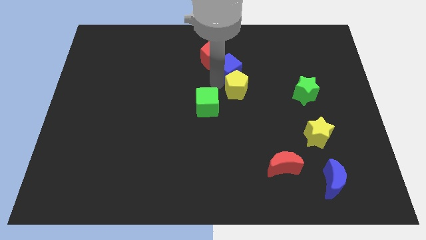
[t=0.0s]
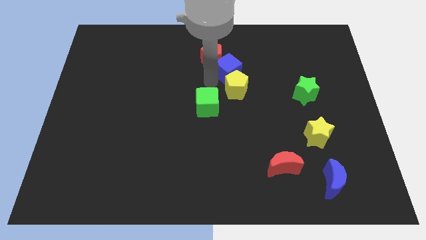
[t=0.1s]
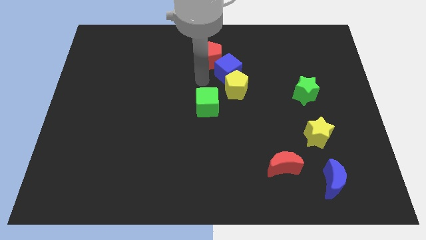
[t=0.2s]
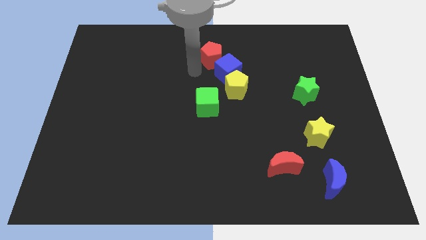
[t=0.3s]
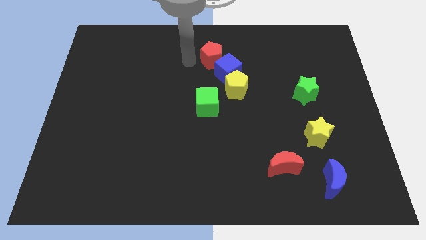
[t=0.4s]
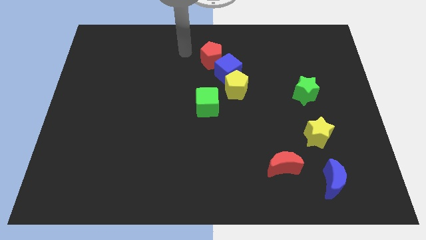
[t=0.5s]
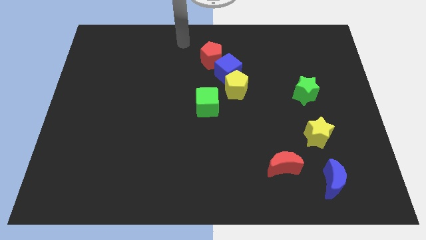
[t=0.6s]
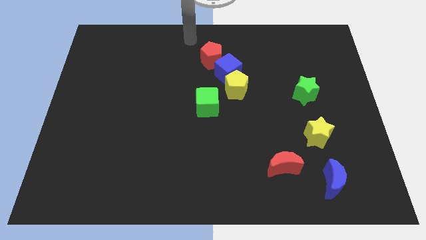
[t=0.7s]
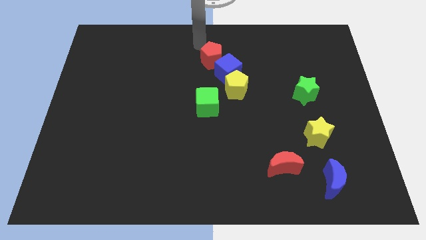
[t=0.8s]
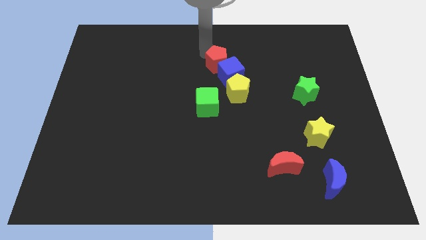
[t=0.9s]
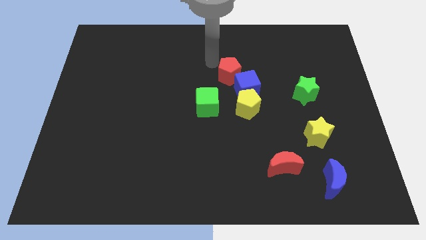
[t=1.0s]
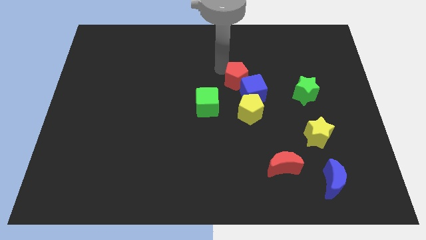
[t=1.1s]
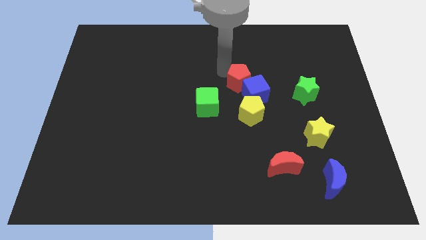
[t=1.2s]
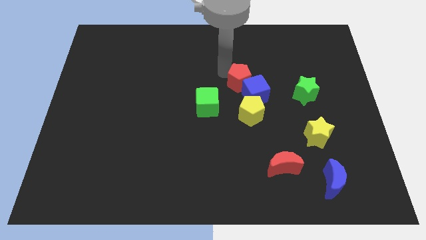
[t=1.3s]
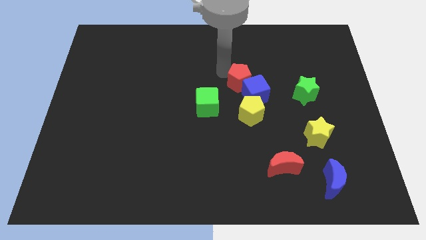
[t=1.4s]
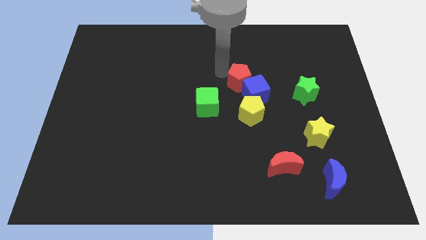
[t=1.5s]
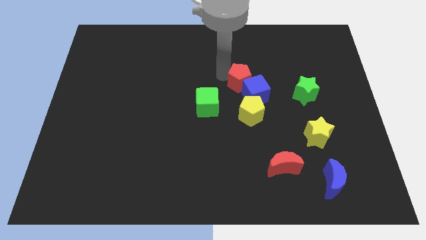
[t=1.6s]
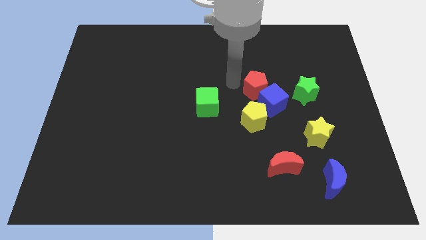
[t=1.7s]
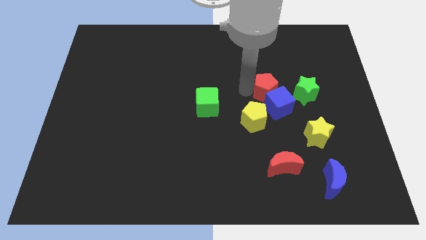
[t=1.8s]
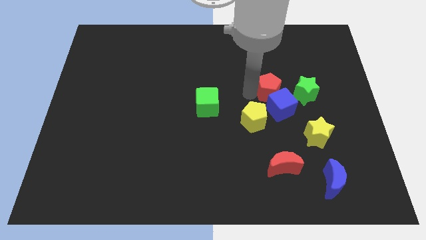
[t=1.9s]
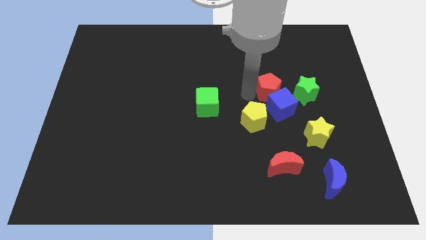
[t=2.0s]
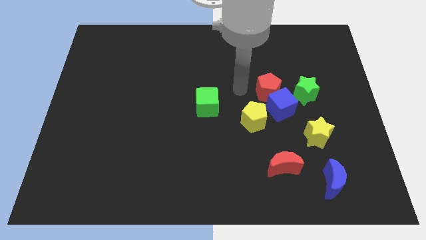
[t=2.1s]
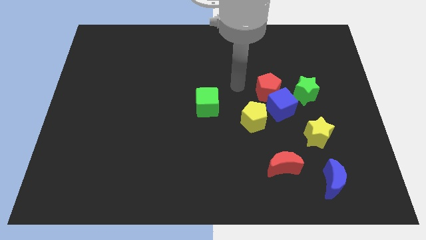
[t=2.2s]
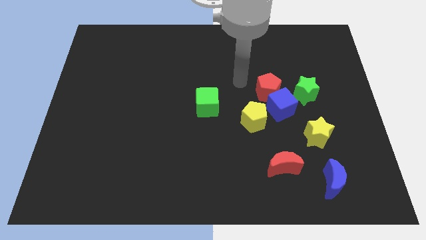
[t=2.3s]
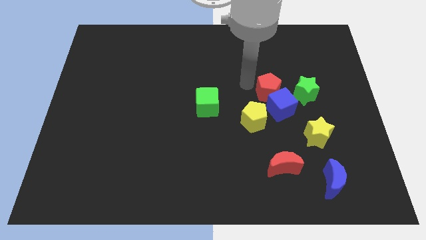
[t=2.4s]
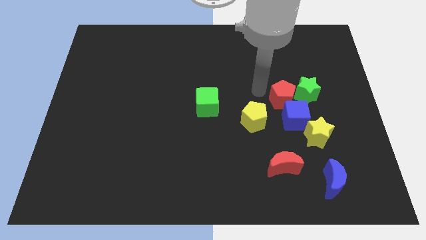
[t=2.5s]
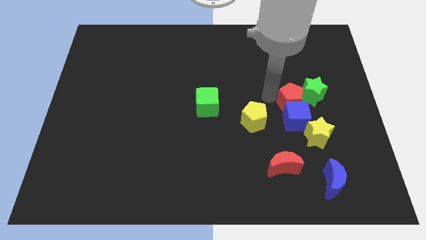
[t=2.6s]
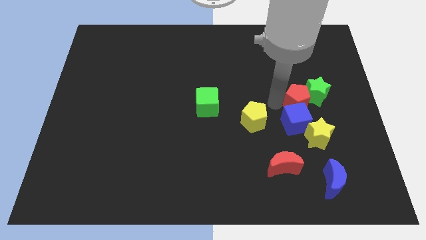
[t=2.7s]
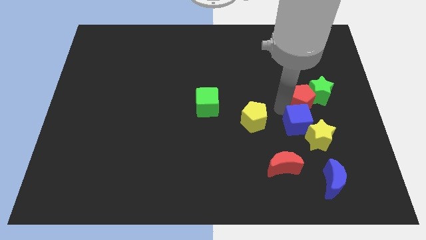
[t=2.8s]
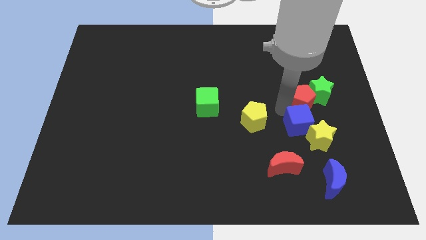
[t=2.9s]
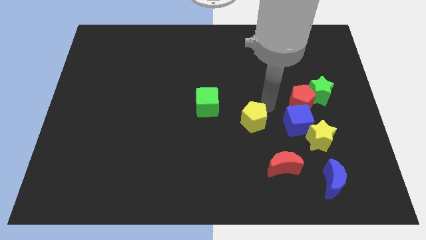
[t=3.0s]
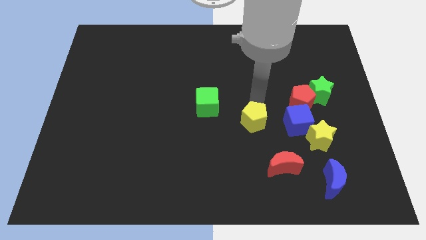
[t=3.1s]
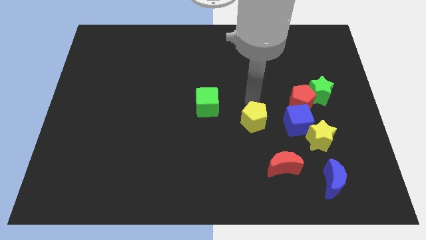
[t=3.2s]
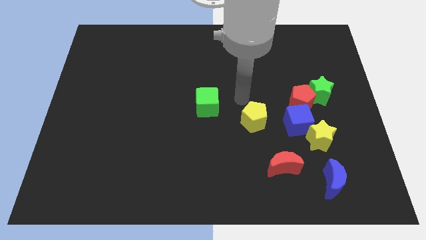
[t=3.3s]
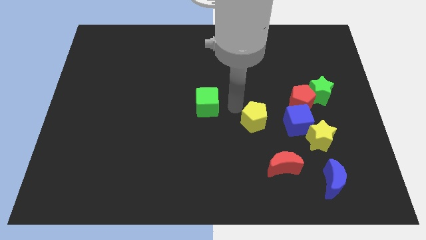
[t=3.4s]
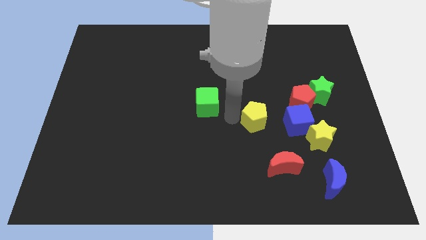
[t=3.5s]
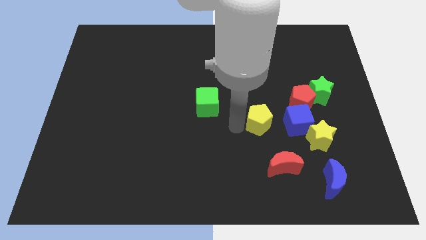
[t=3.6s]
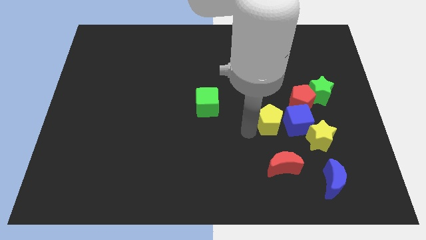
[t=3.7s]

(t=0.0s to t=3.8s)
push the red pentagon into the blue cube

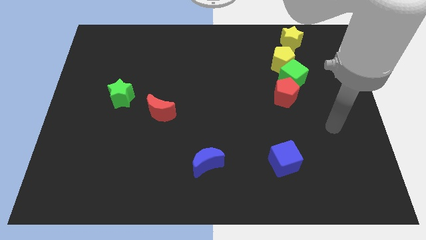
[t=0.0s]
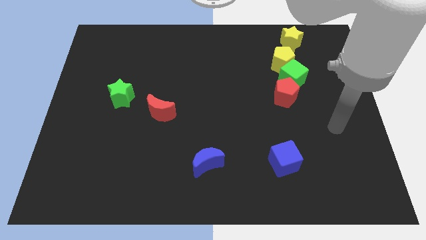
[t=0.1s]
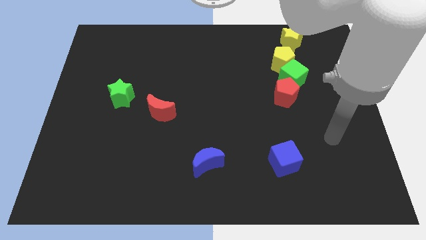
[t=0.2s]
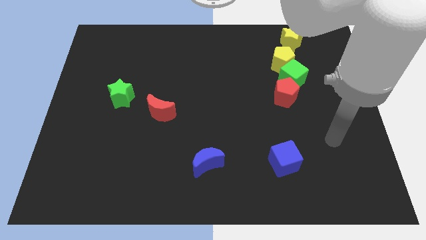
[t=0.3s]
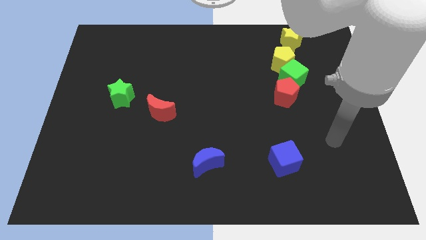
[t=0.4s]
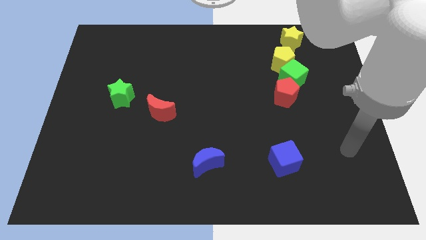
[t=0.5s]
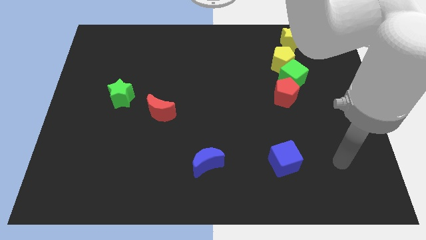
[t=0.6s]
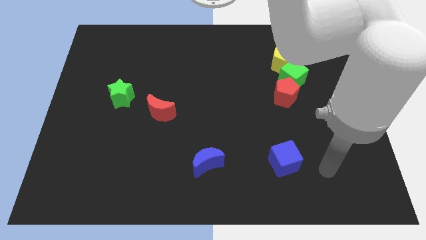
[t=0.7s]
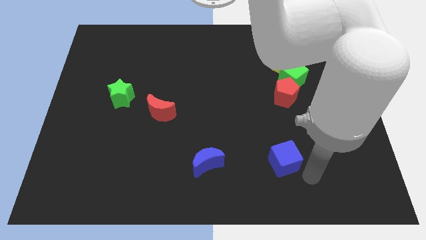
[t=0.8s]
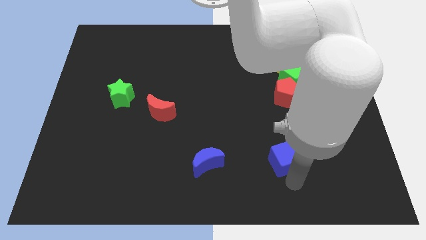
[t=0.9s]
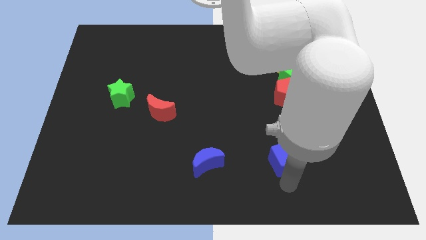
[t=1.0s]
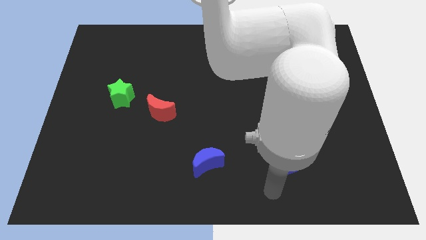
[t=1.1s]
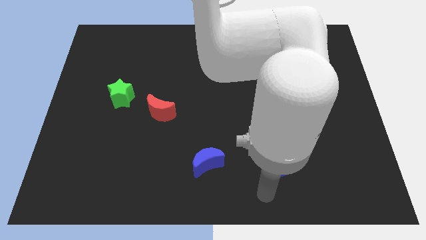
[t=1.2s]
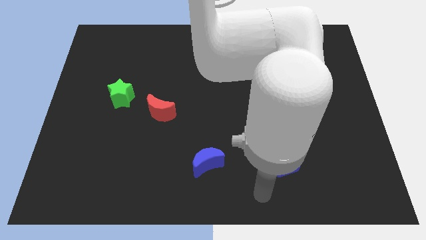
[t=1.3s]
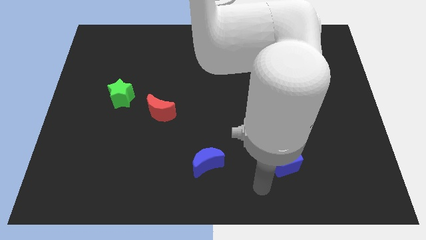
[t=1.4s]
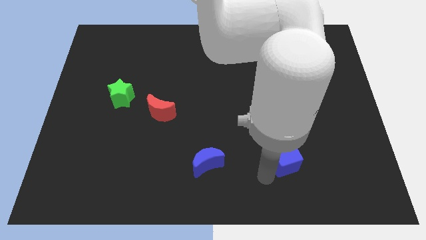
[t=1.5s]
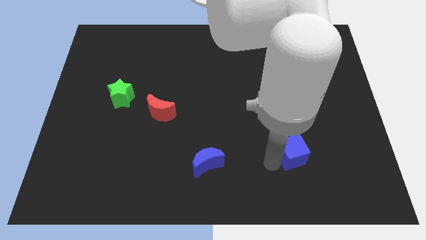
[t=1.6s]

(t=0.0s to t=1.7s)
move blue cube towards right side

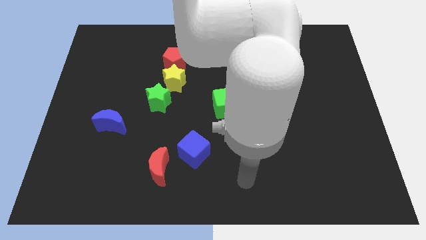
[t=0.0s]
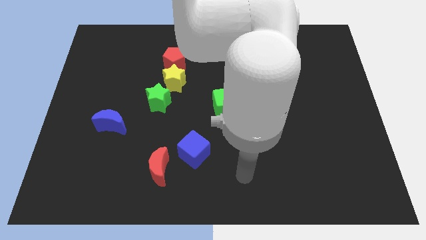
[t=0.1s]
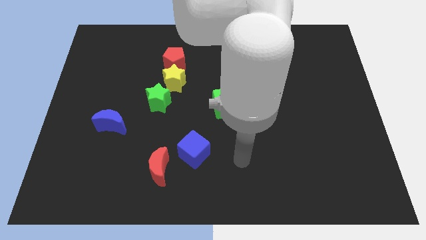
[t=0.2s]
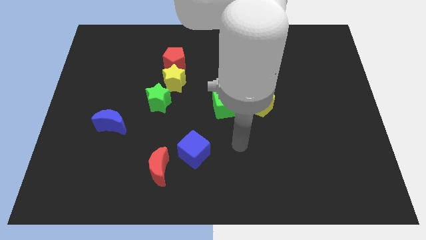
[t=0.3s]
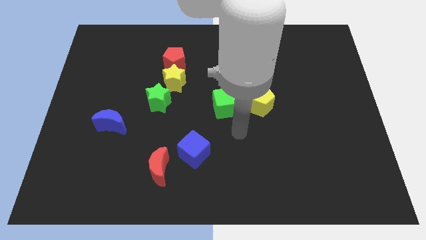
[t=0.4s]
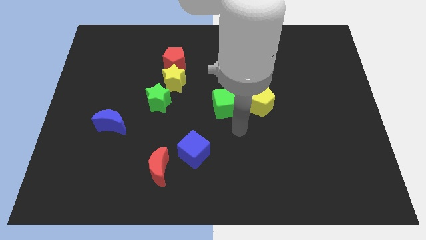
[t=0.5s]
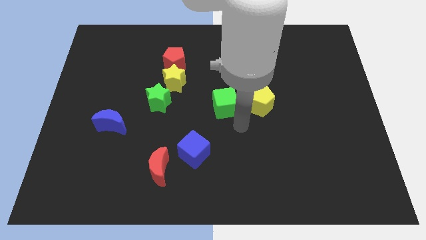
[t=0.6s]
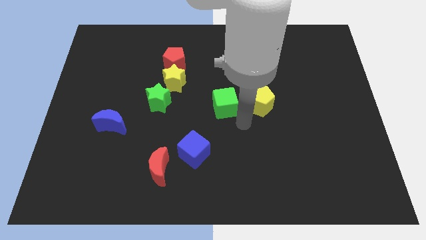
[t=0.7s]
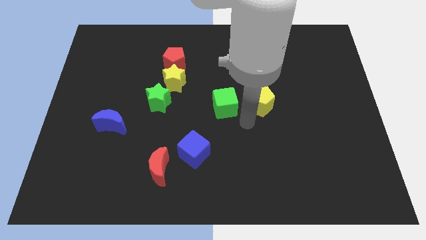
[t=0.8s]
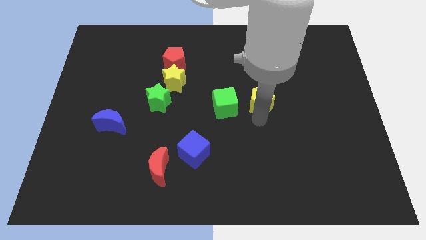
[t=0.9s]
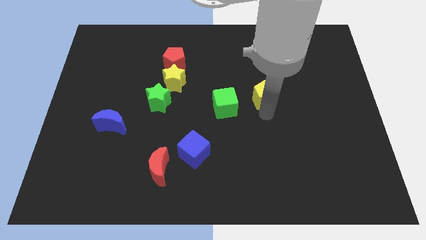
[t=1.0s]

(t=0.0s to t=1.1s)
move the arm to the bottom side of the yellow pentagon

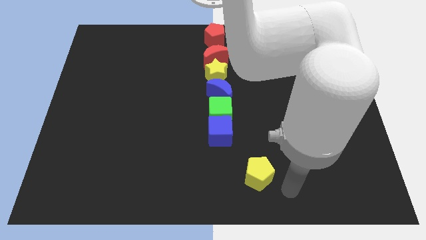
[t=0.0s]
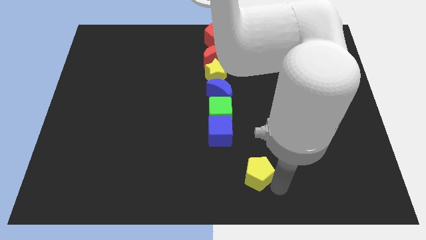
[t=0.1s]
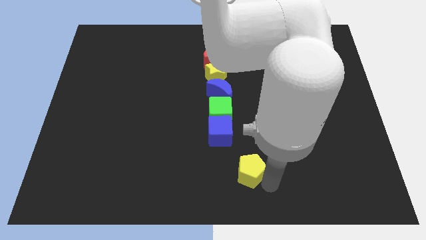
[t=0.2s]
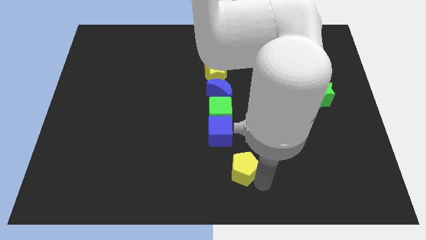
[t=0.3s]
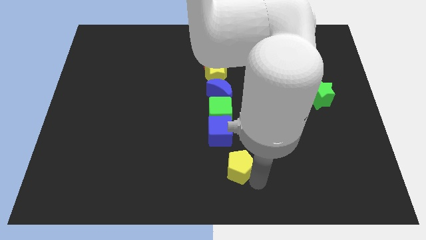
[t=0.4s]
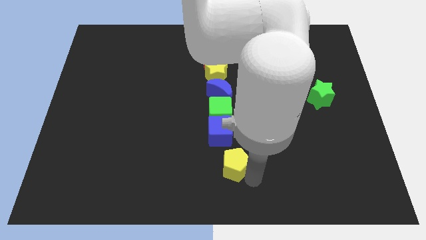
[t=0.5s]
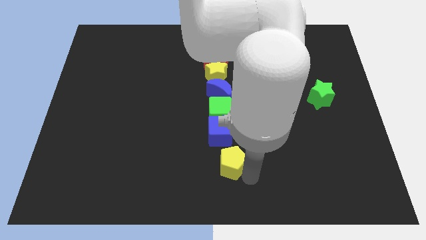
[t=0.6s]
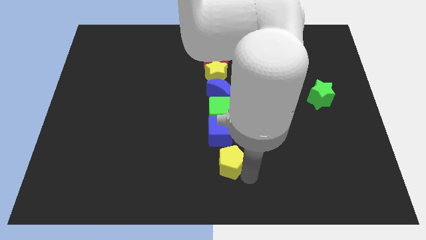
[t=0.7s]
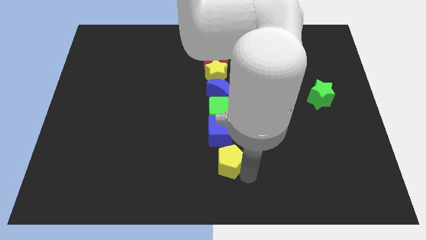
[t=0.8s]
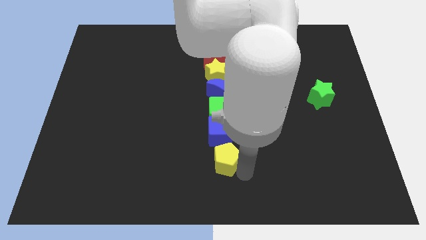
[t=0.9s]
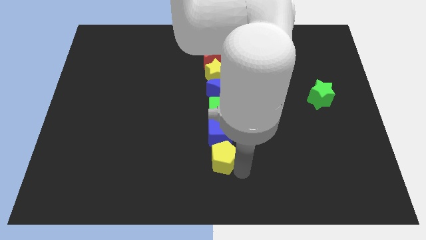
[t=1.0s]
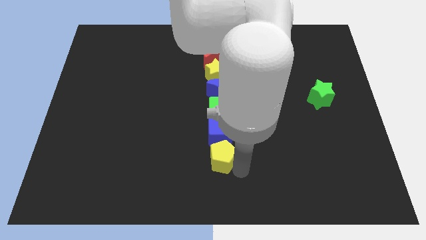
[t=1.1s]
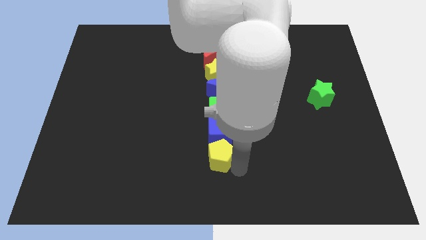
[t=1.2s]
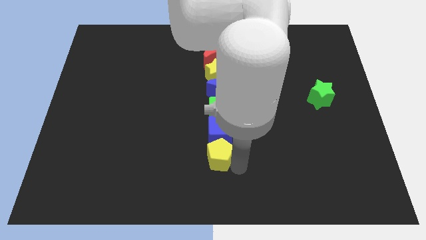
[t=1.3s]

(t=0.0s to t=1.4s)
put the yellow pentagon underneath the blue cube

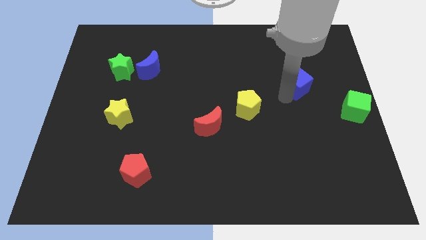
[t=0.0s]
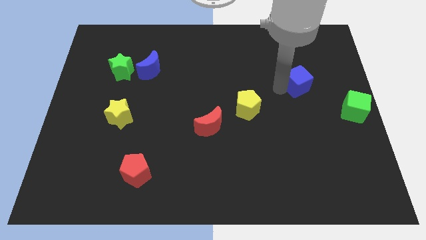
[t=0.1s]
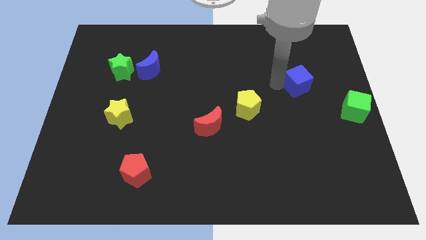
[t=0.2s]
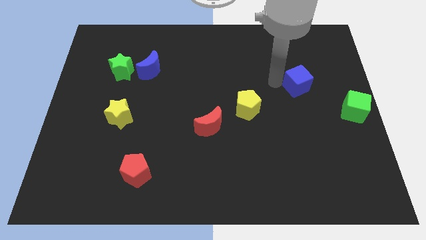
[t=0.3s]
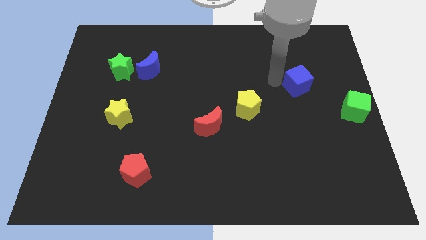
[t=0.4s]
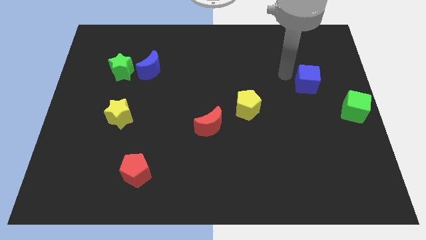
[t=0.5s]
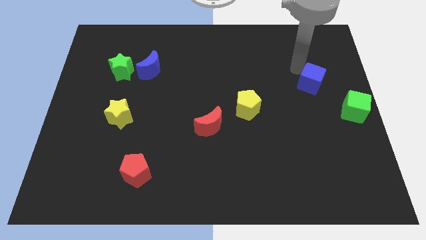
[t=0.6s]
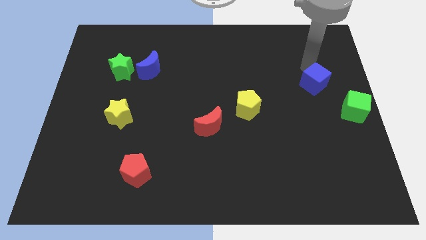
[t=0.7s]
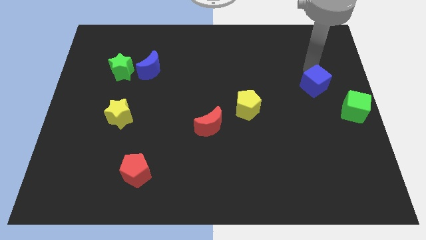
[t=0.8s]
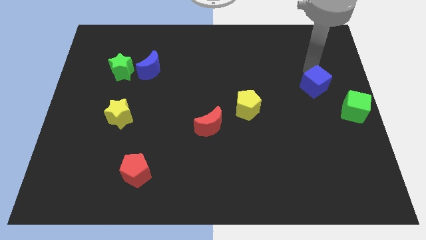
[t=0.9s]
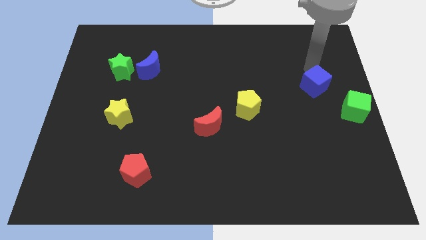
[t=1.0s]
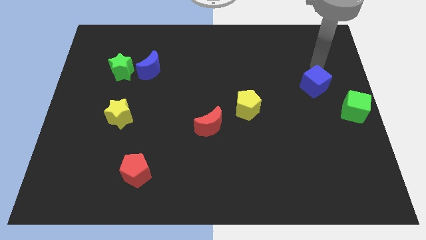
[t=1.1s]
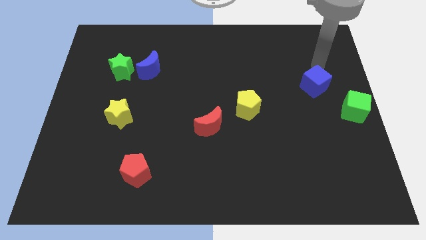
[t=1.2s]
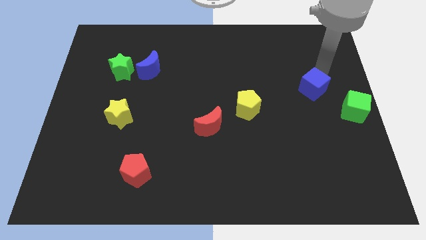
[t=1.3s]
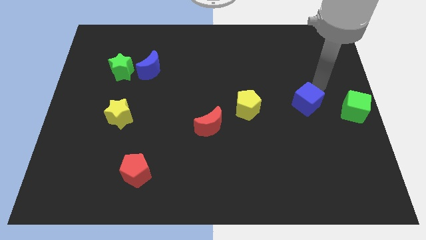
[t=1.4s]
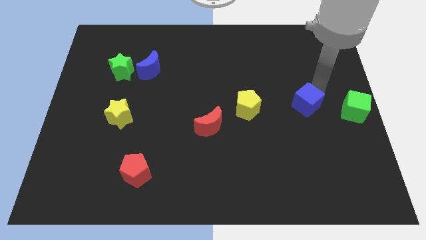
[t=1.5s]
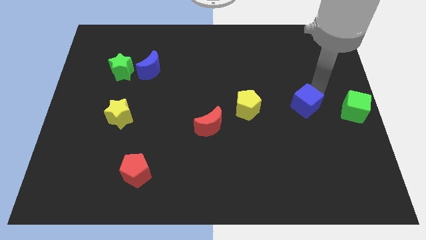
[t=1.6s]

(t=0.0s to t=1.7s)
place the blue cube in between the yellow pentagon and green cube
